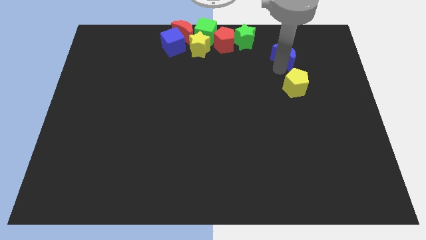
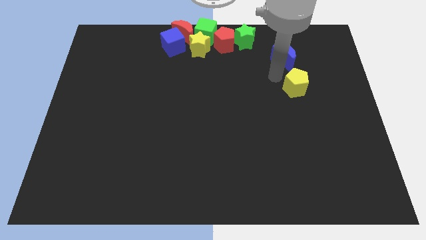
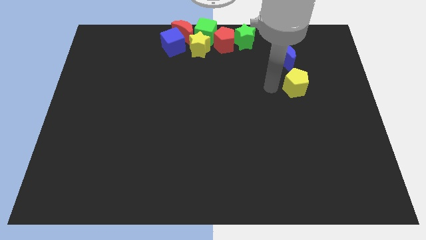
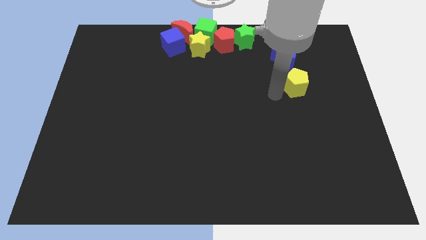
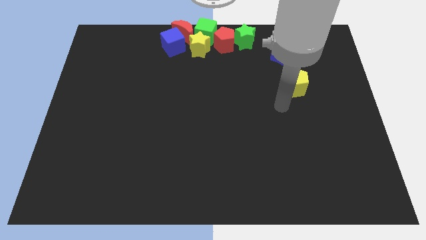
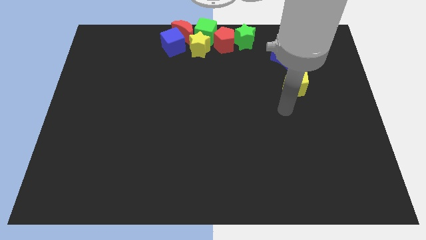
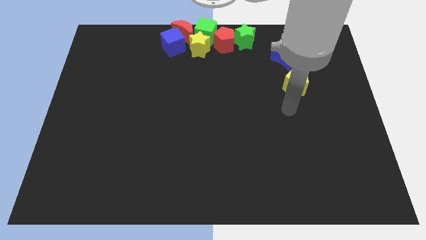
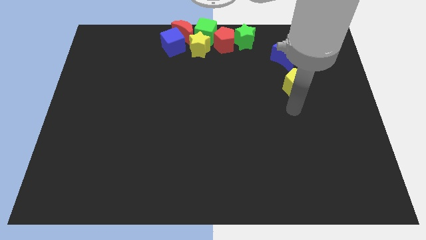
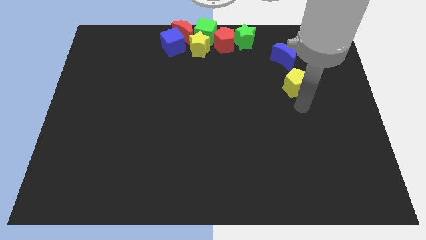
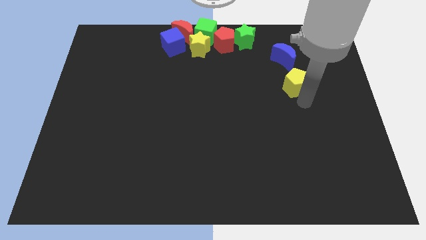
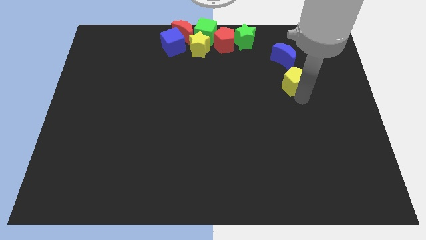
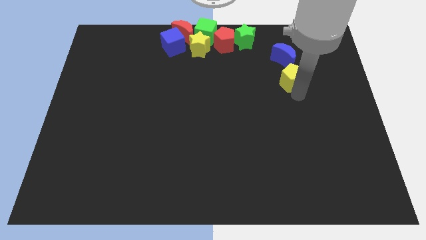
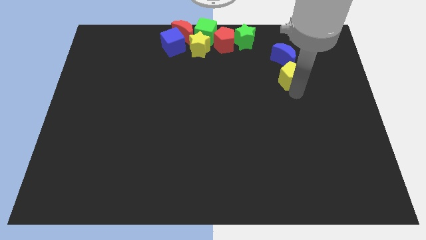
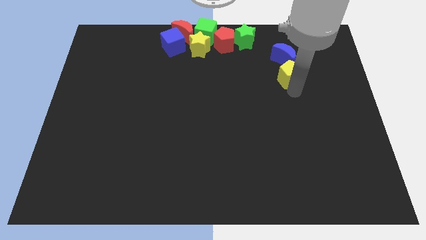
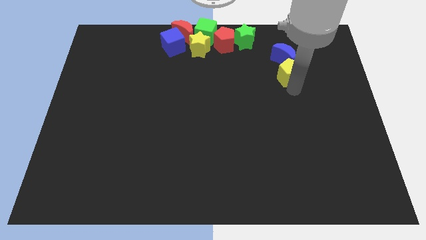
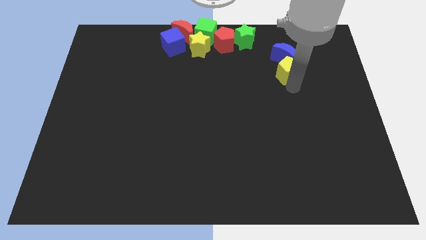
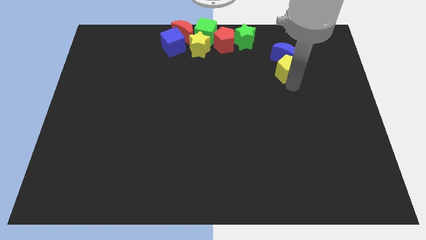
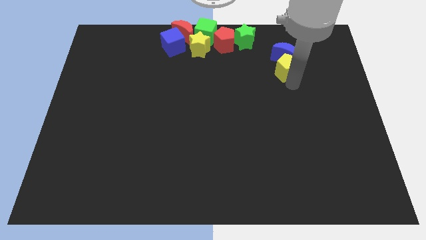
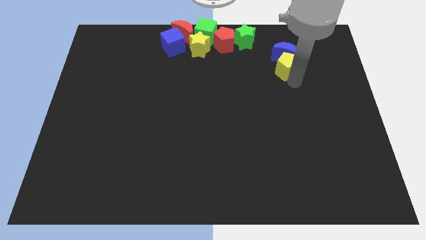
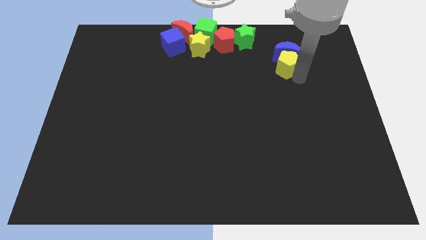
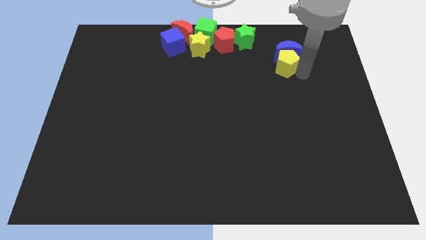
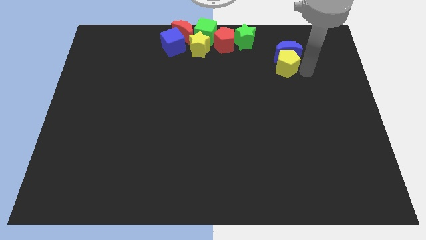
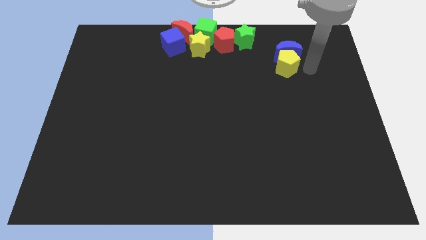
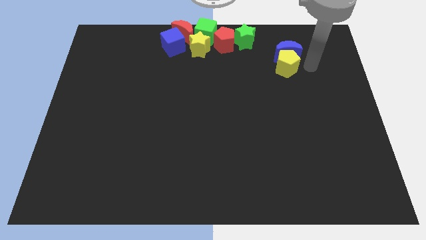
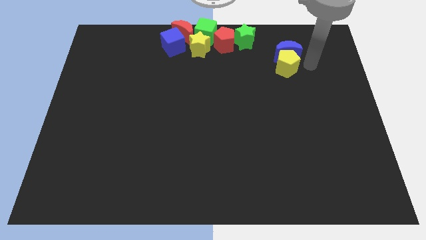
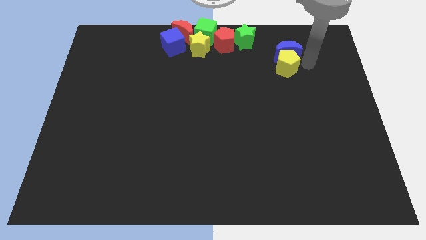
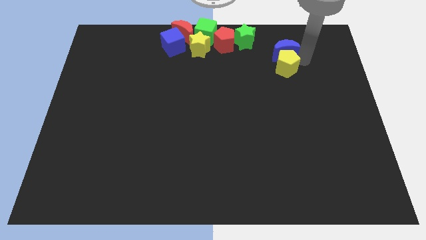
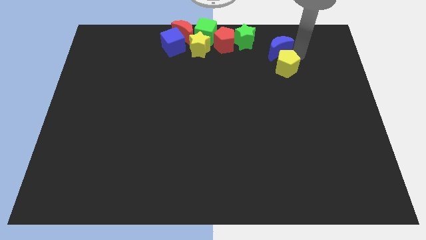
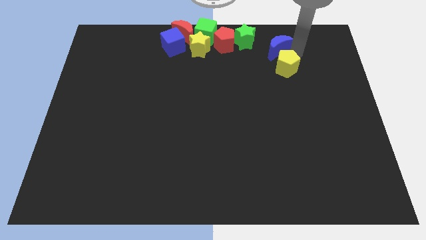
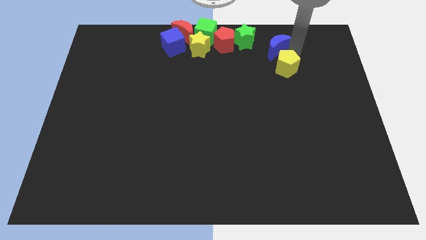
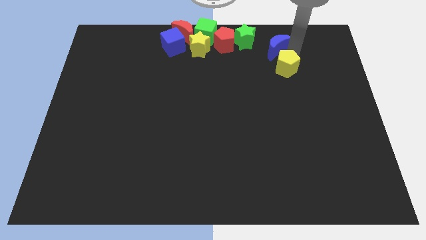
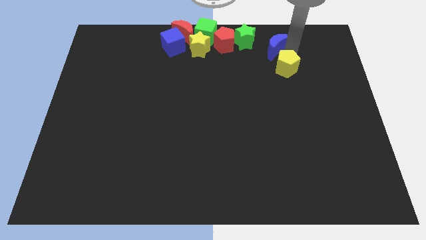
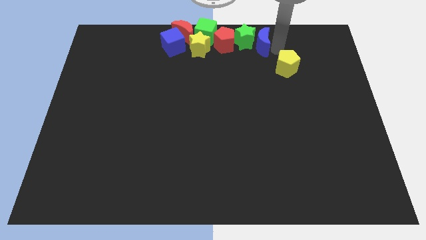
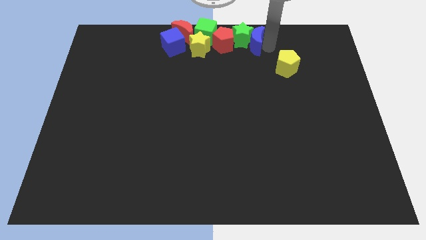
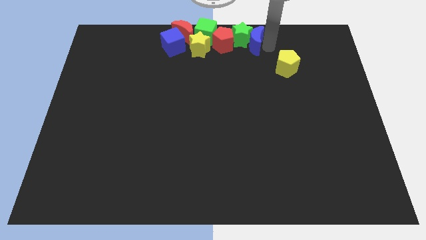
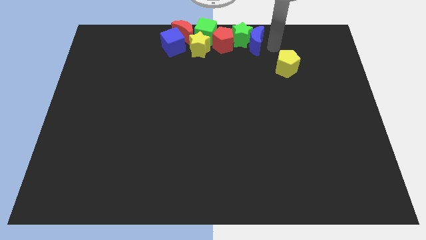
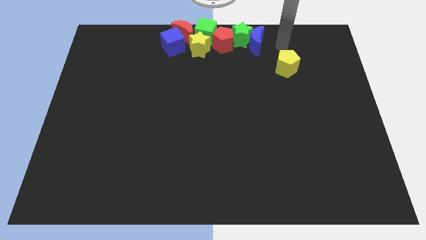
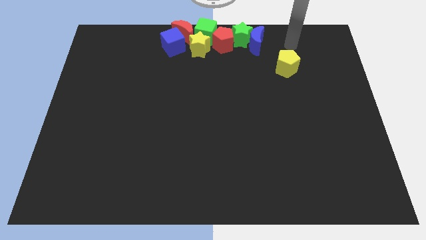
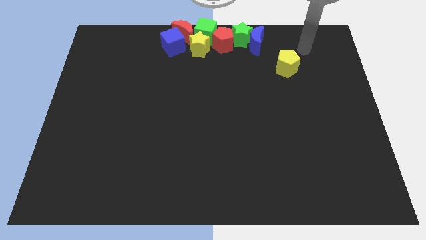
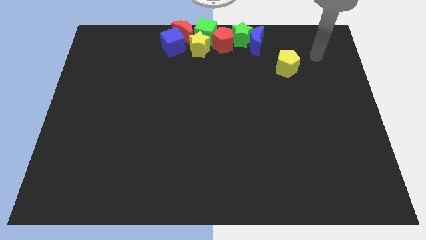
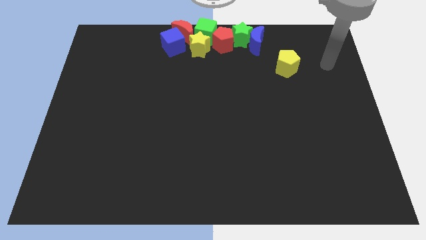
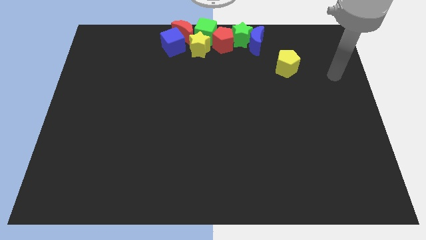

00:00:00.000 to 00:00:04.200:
move the blue moon to the right side of the green star

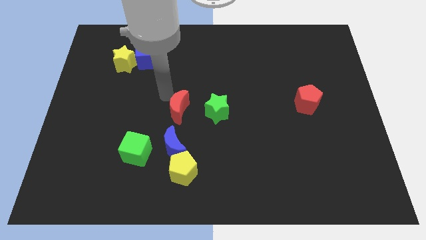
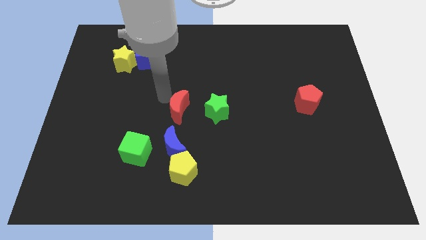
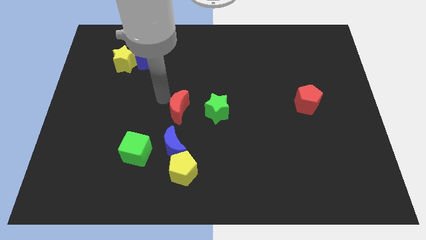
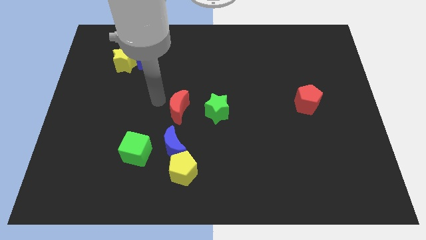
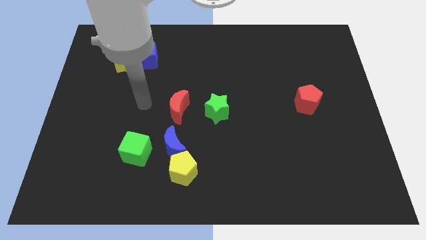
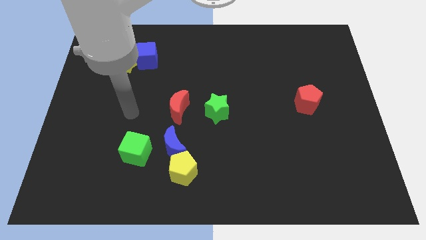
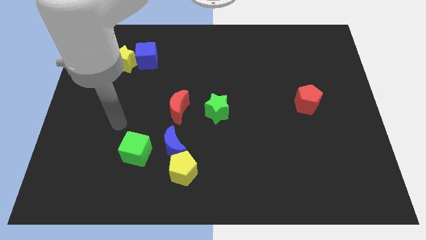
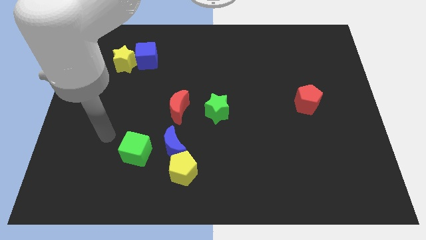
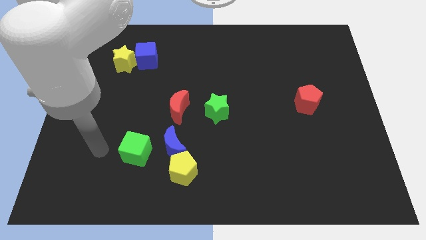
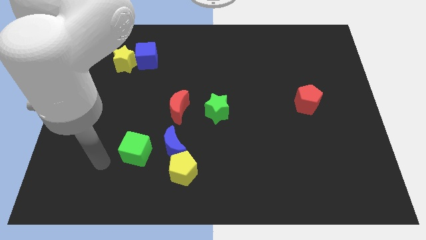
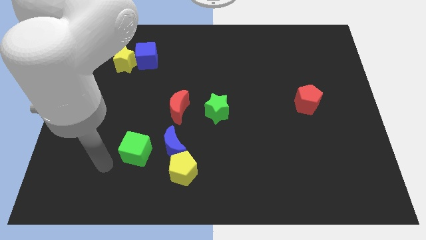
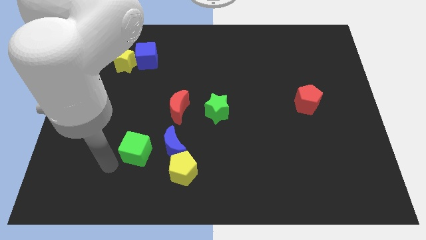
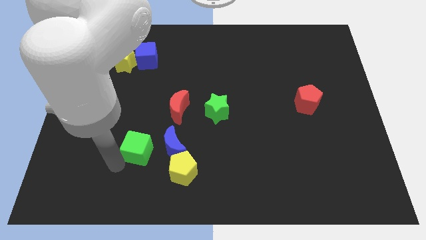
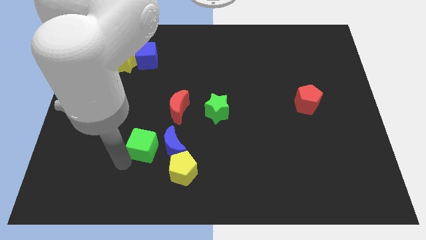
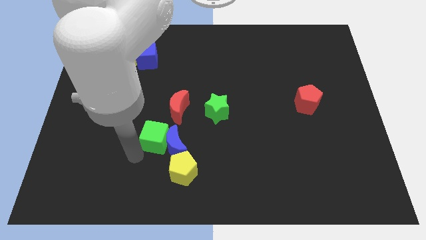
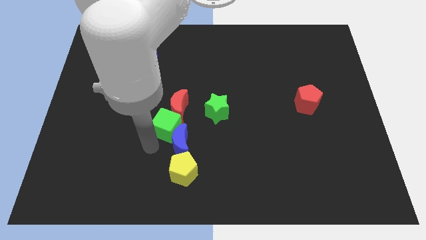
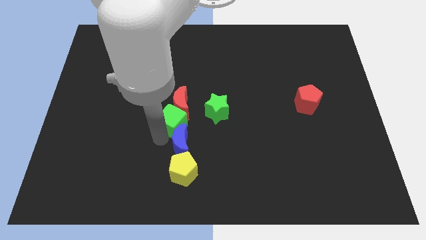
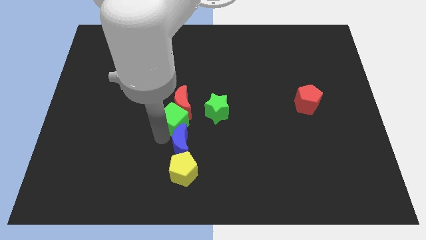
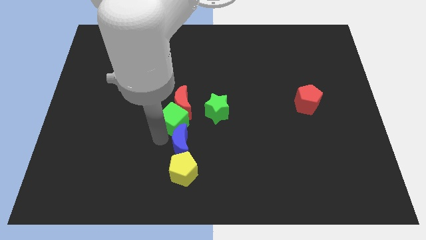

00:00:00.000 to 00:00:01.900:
push the green cube into the red crescent

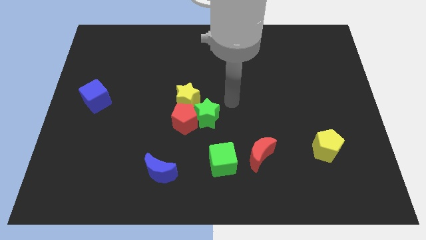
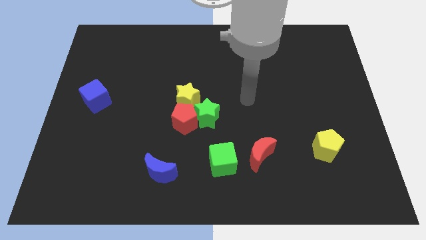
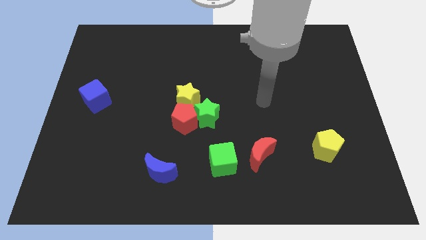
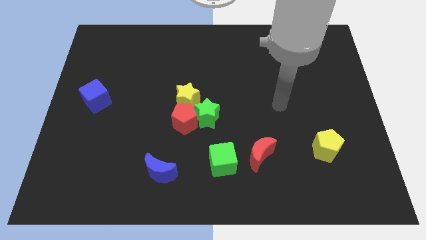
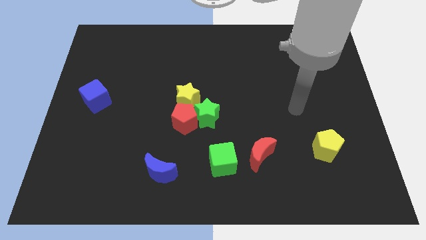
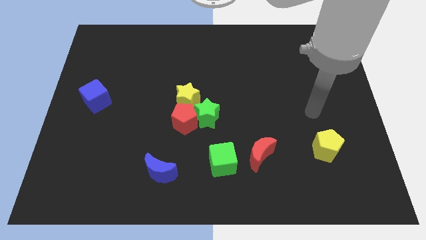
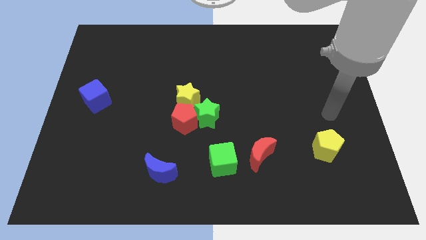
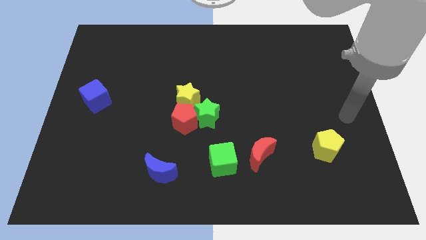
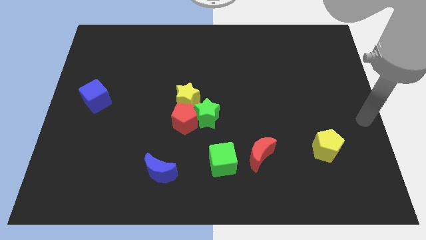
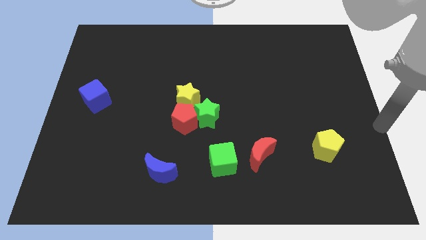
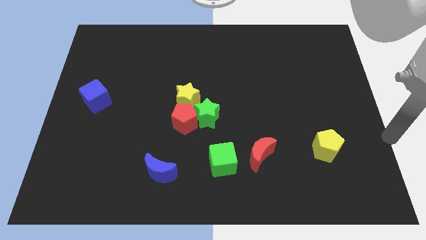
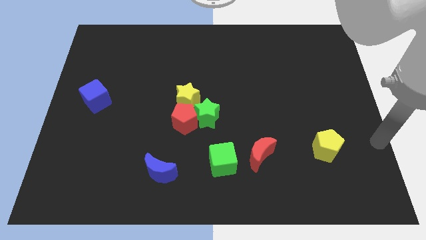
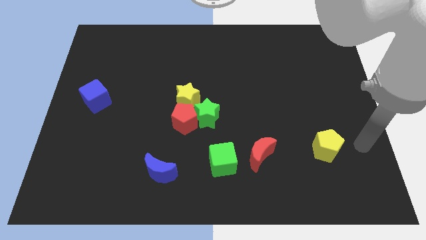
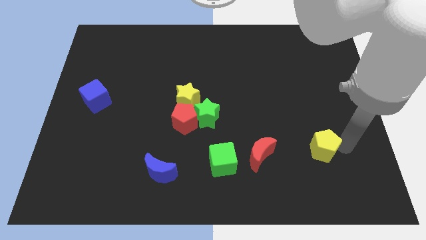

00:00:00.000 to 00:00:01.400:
move your arm towards the yellow pentagon

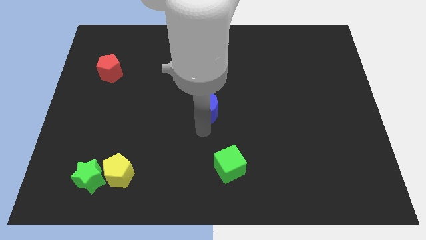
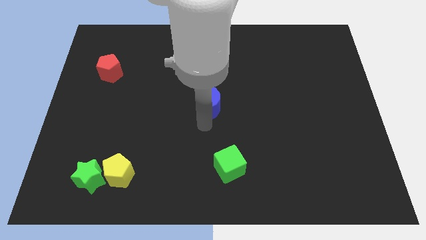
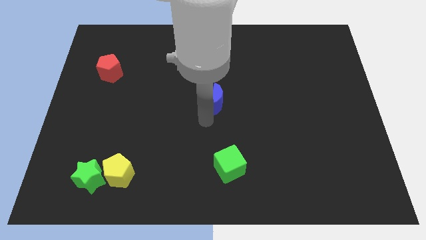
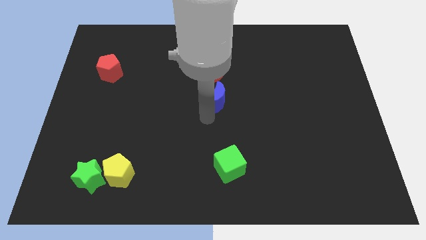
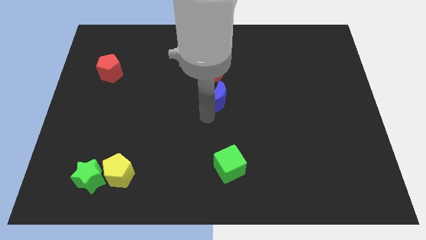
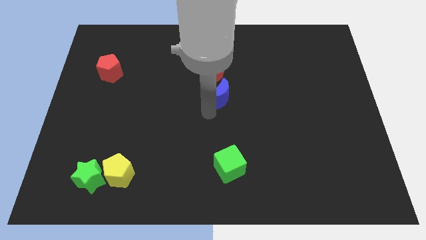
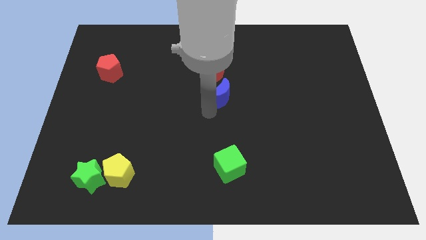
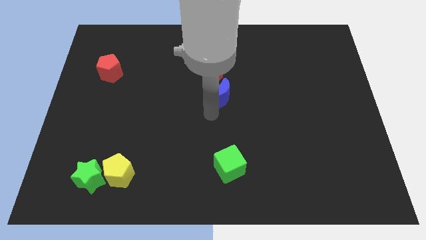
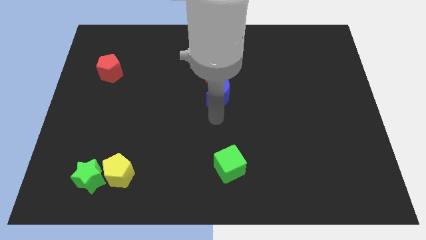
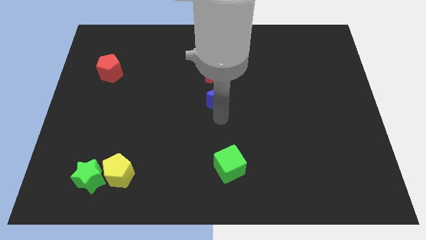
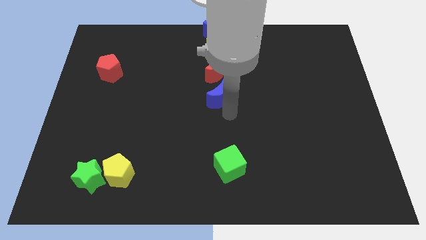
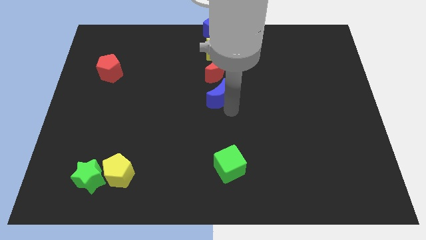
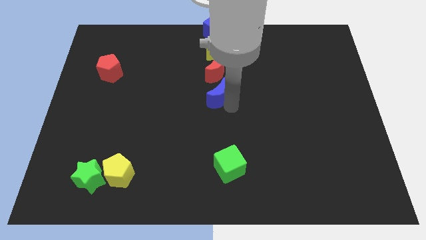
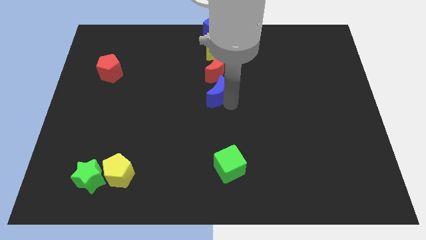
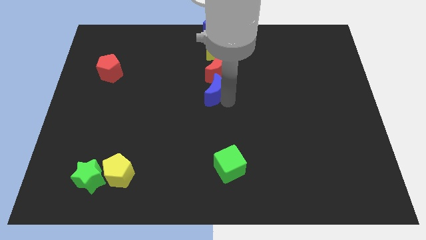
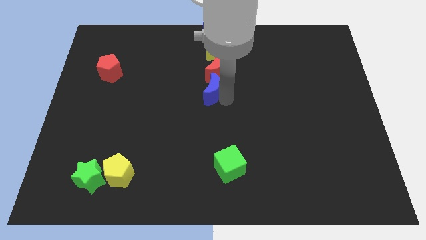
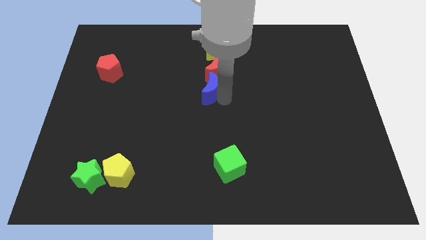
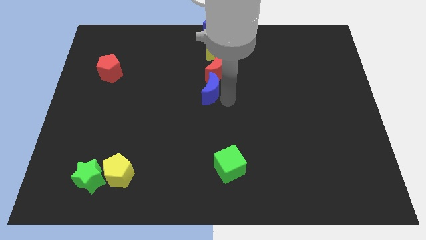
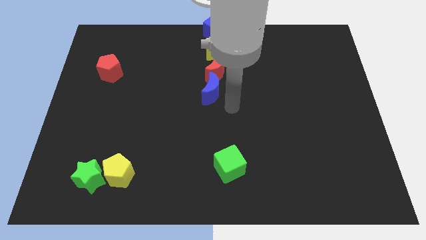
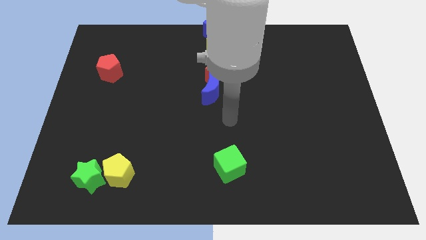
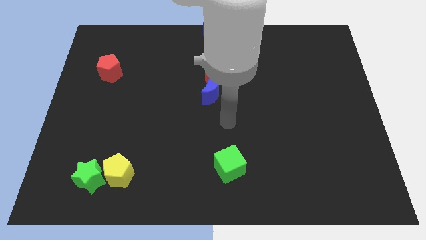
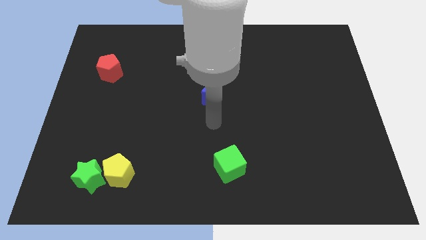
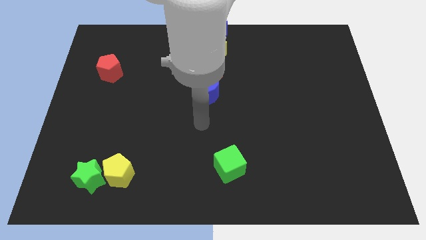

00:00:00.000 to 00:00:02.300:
push the blue crescent below the red moon
